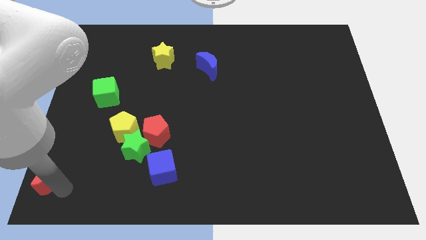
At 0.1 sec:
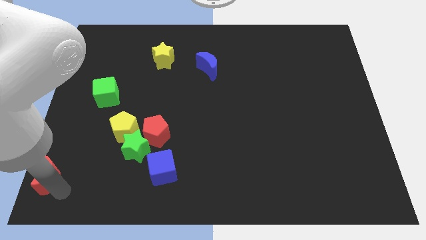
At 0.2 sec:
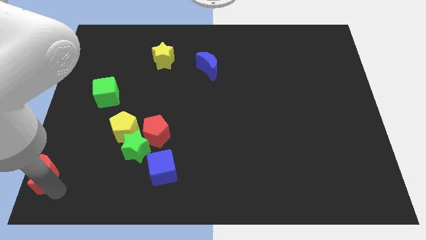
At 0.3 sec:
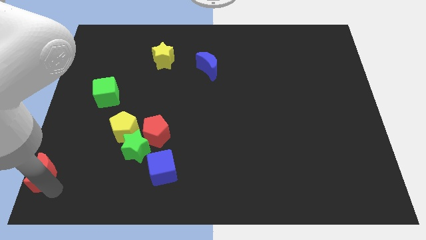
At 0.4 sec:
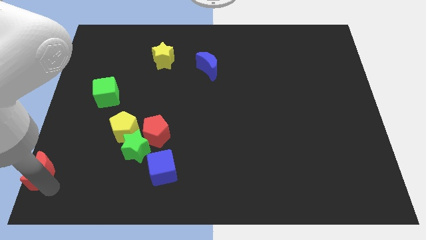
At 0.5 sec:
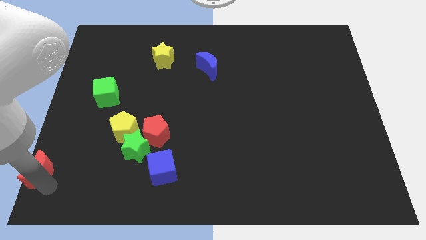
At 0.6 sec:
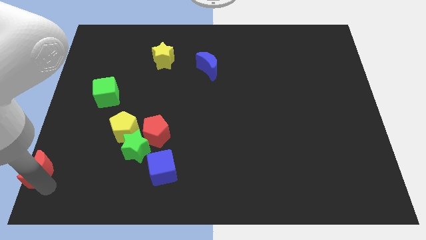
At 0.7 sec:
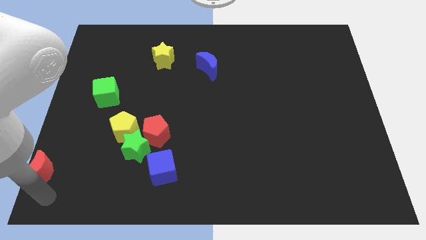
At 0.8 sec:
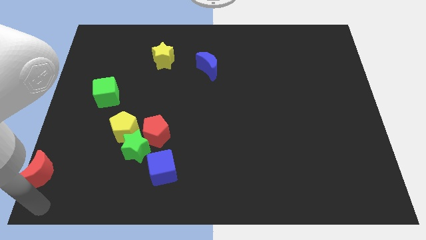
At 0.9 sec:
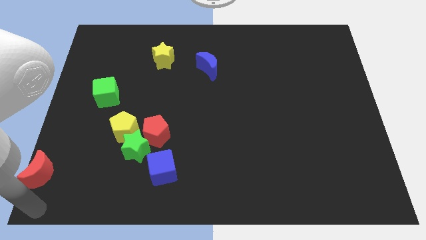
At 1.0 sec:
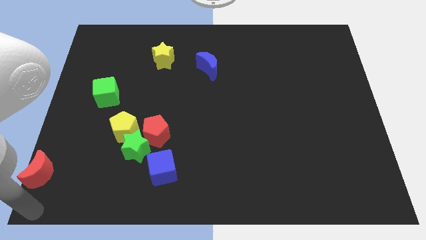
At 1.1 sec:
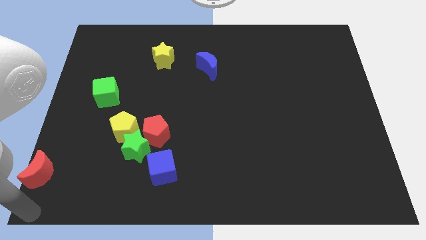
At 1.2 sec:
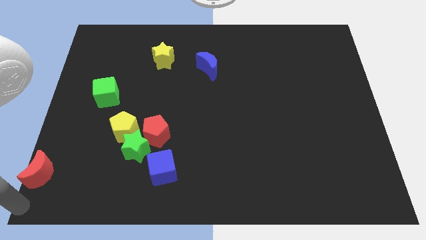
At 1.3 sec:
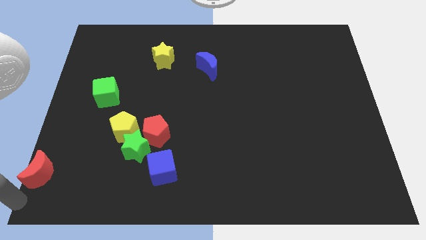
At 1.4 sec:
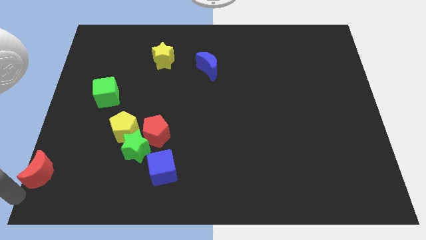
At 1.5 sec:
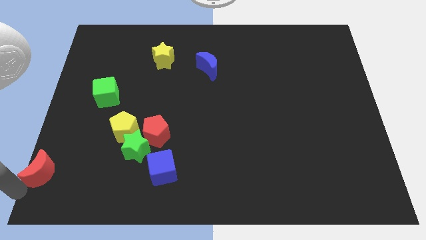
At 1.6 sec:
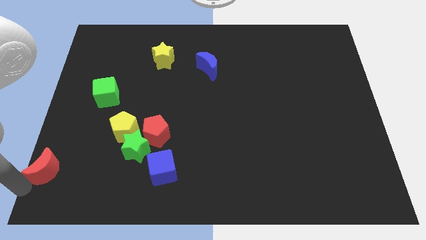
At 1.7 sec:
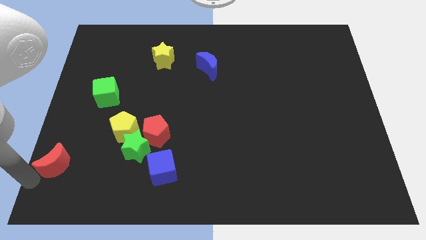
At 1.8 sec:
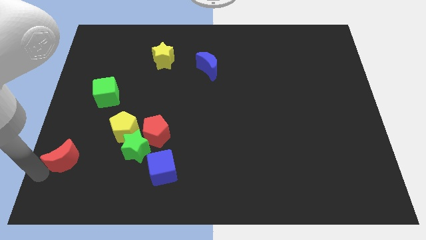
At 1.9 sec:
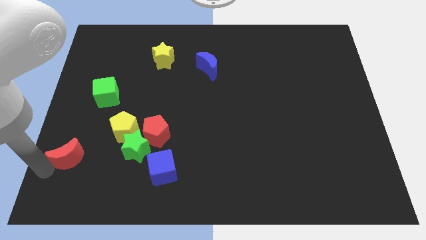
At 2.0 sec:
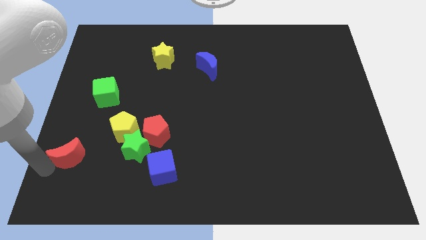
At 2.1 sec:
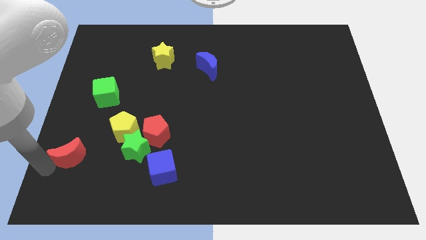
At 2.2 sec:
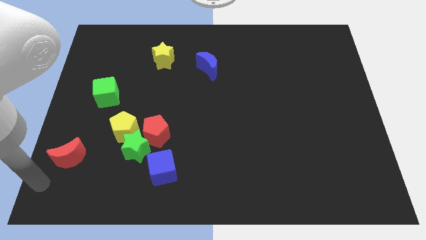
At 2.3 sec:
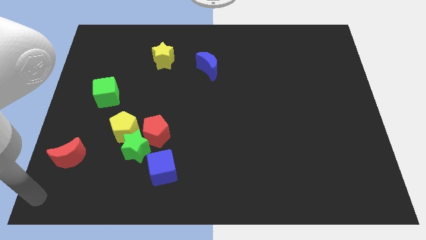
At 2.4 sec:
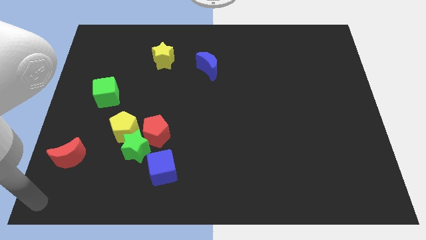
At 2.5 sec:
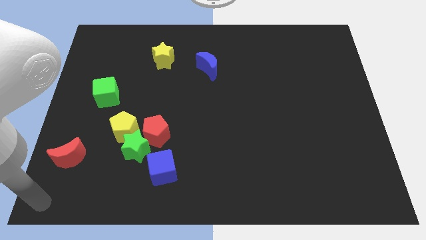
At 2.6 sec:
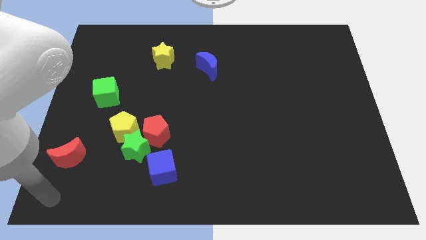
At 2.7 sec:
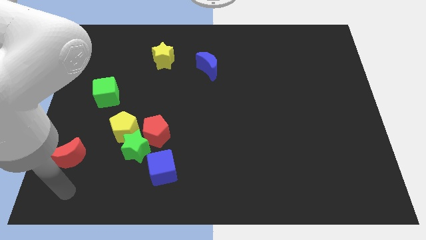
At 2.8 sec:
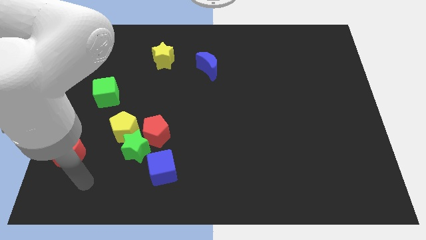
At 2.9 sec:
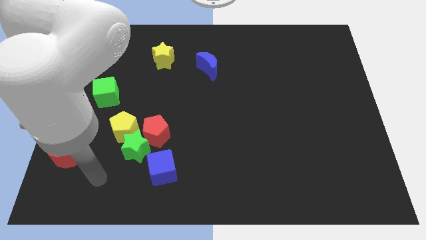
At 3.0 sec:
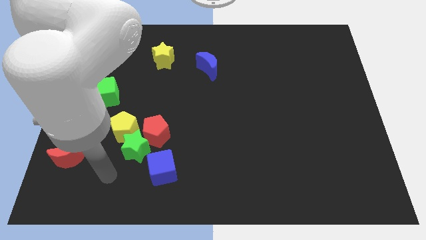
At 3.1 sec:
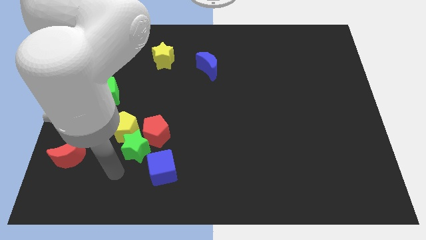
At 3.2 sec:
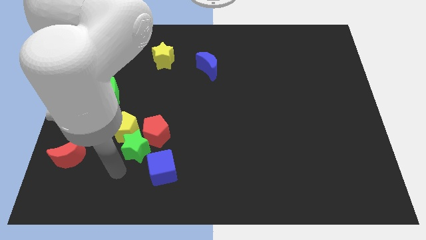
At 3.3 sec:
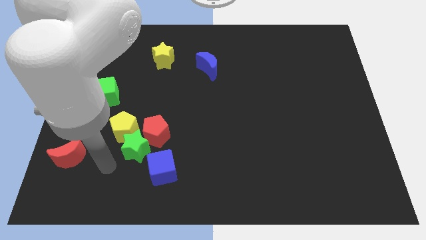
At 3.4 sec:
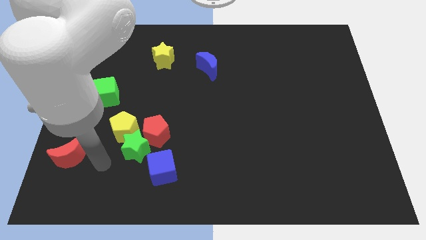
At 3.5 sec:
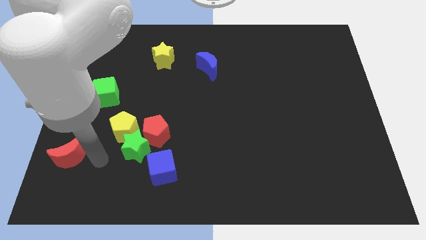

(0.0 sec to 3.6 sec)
move the red moon horizontally at the left side of the green star

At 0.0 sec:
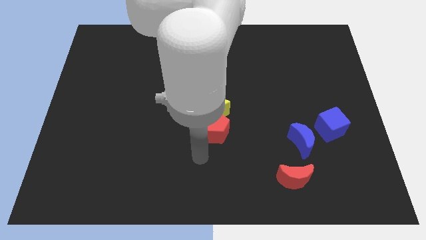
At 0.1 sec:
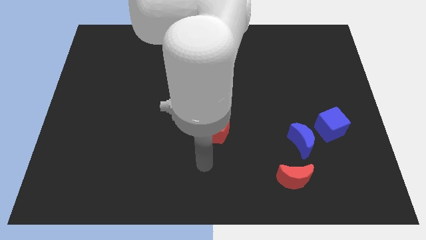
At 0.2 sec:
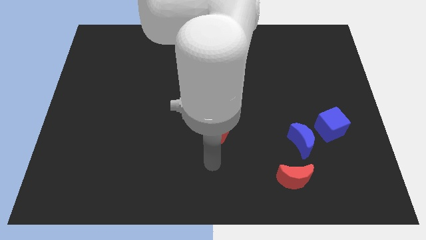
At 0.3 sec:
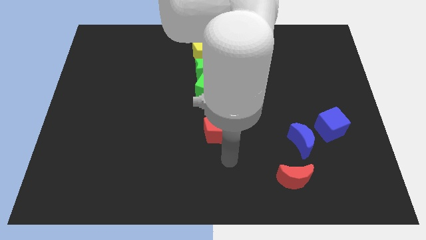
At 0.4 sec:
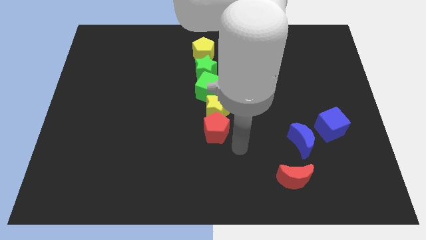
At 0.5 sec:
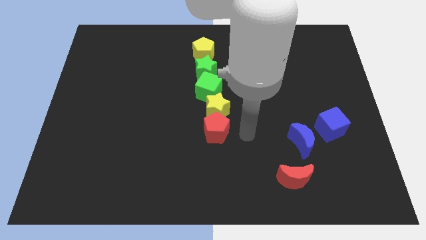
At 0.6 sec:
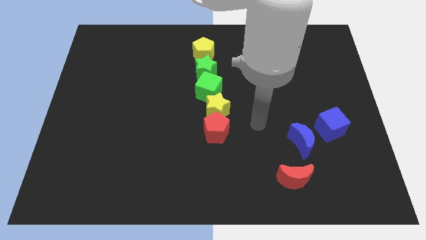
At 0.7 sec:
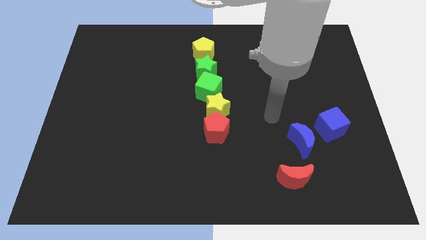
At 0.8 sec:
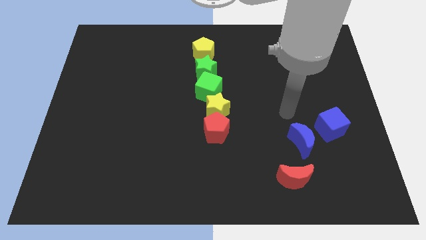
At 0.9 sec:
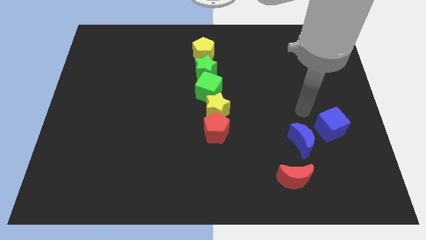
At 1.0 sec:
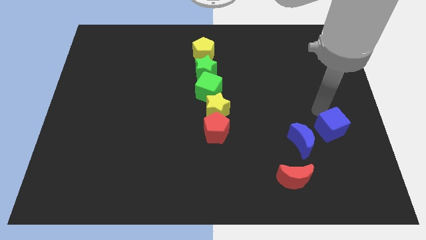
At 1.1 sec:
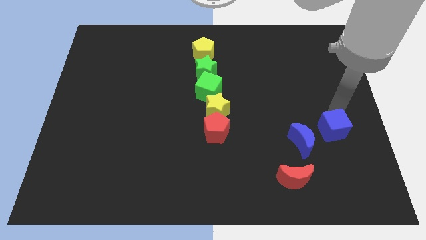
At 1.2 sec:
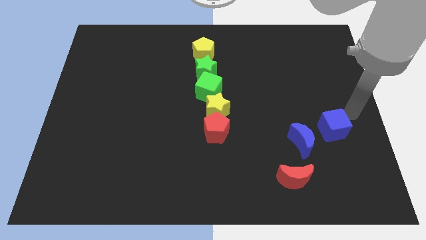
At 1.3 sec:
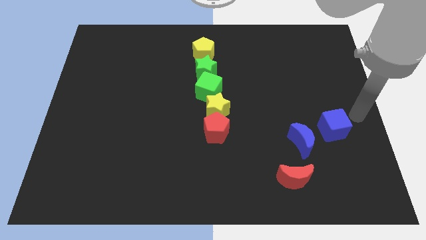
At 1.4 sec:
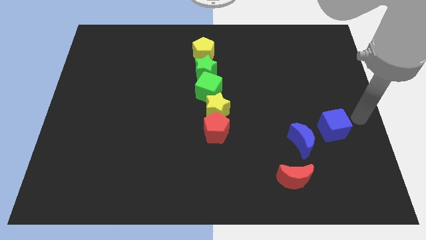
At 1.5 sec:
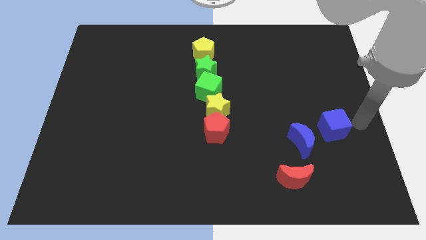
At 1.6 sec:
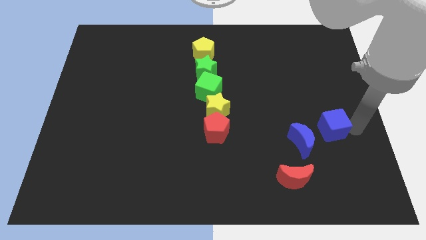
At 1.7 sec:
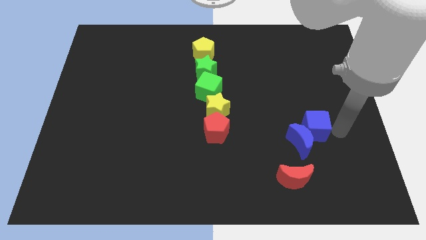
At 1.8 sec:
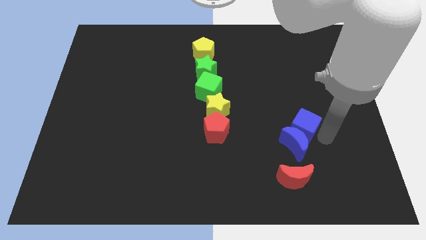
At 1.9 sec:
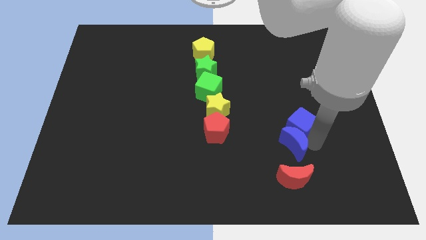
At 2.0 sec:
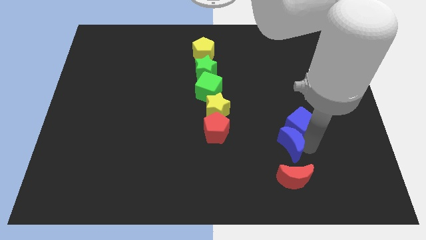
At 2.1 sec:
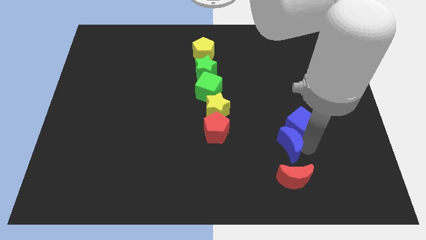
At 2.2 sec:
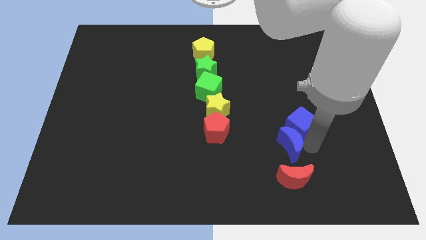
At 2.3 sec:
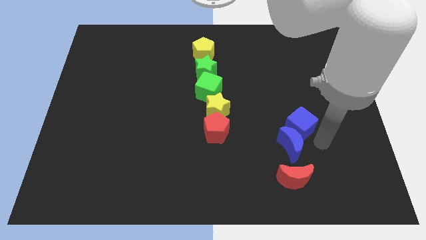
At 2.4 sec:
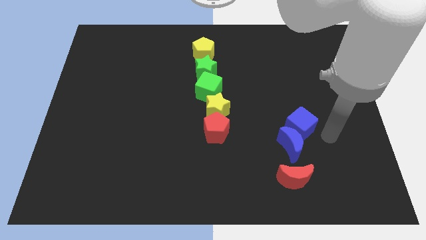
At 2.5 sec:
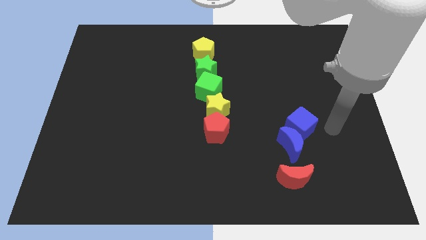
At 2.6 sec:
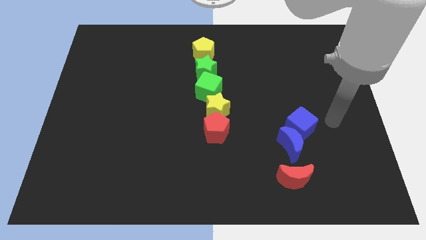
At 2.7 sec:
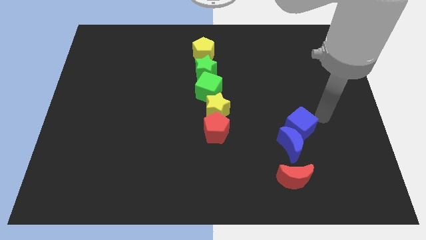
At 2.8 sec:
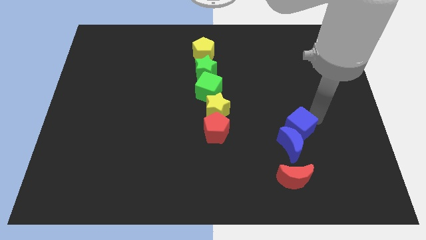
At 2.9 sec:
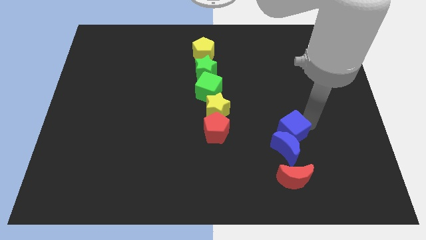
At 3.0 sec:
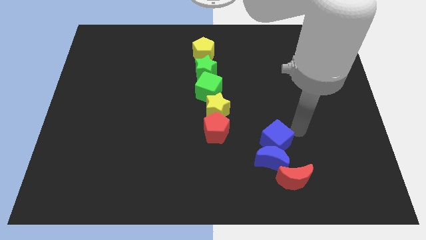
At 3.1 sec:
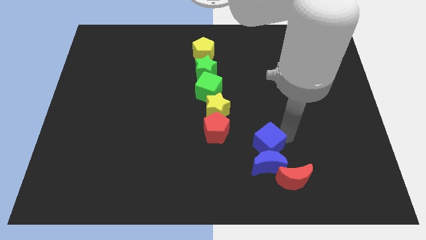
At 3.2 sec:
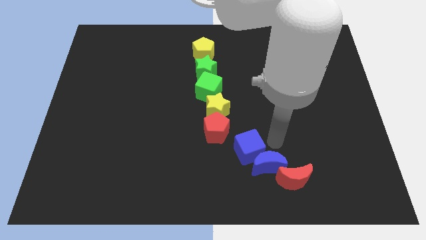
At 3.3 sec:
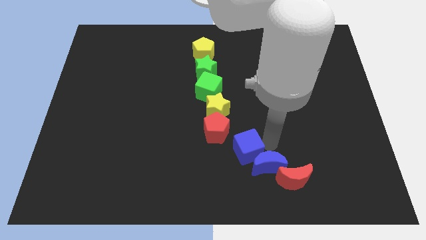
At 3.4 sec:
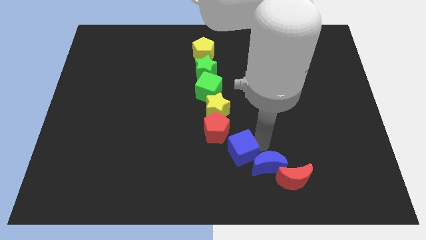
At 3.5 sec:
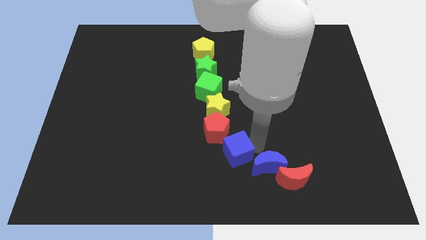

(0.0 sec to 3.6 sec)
move the blue blocks in between the red blocks

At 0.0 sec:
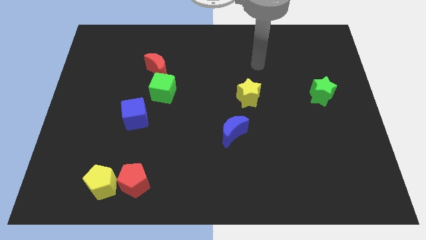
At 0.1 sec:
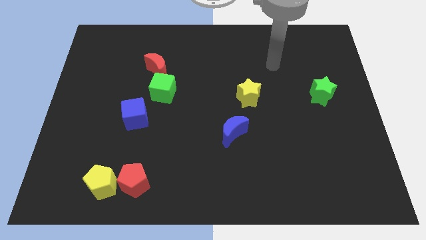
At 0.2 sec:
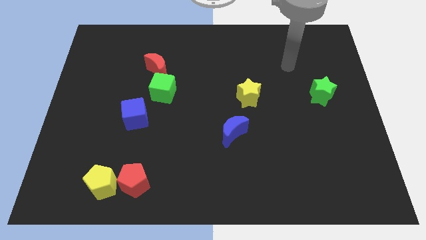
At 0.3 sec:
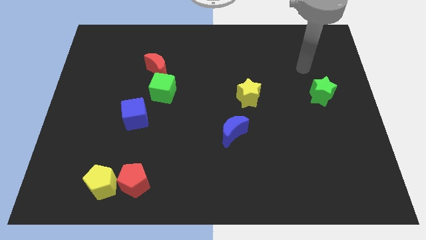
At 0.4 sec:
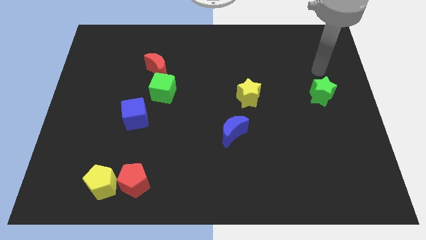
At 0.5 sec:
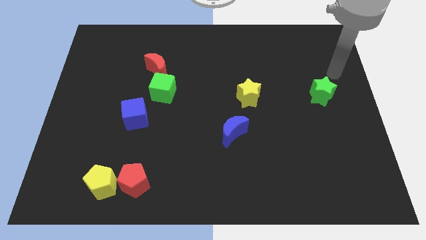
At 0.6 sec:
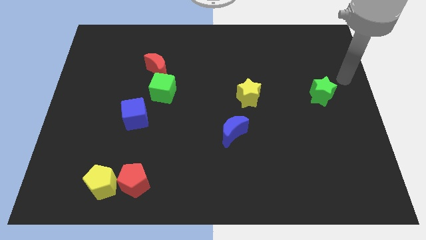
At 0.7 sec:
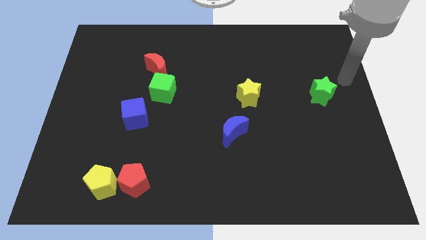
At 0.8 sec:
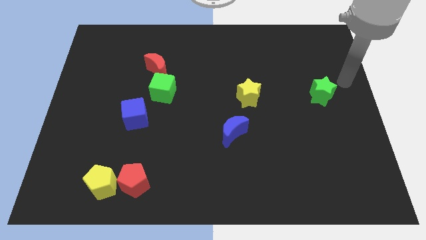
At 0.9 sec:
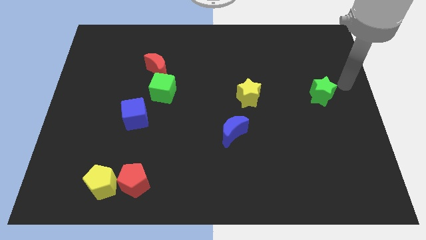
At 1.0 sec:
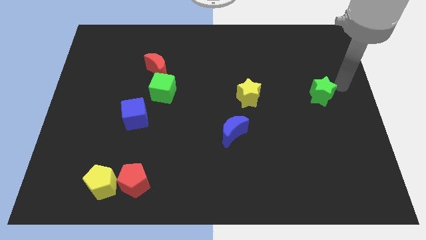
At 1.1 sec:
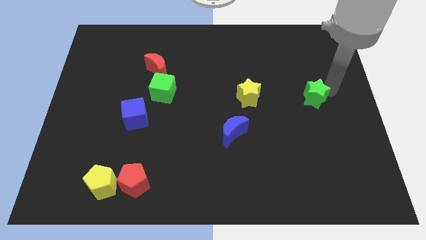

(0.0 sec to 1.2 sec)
touch the green star

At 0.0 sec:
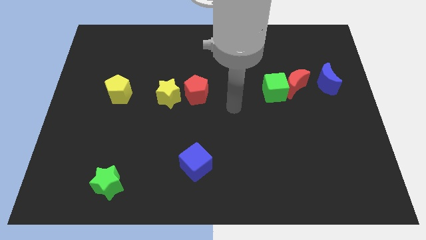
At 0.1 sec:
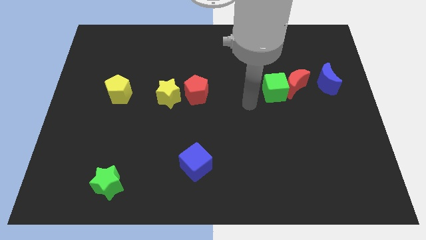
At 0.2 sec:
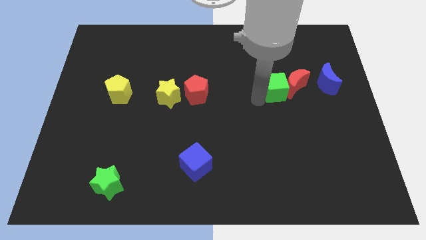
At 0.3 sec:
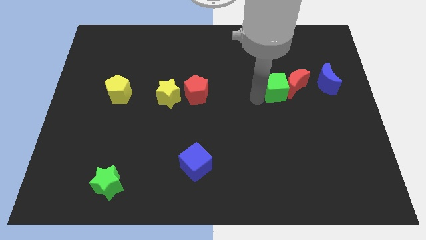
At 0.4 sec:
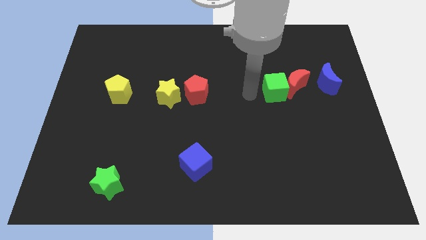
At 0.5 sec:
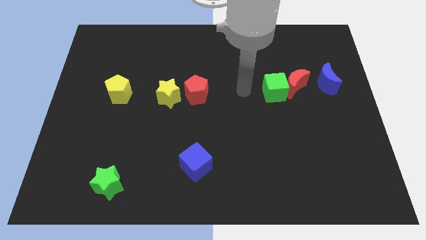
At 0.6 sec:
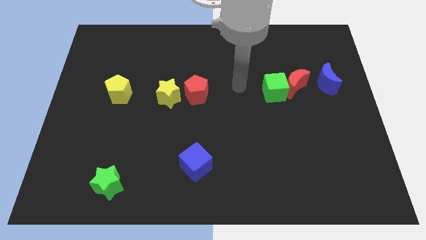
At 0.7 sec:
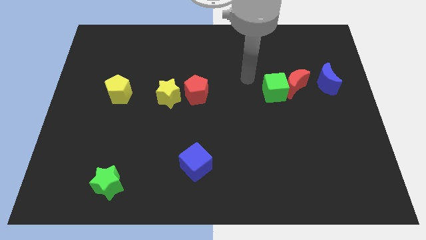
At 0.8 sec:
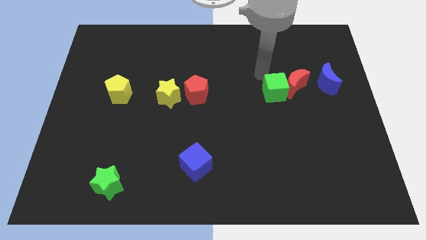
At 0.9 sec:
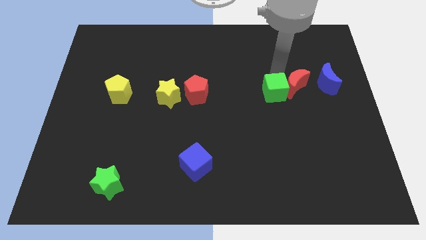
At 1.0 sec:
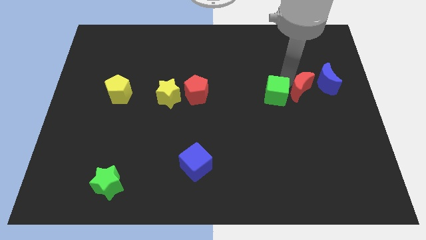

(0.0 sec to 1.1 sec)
place your hand above the green cube
